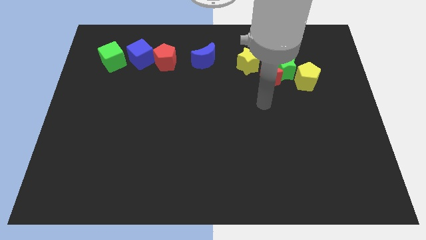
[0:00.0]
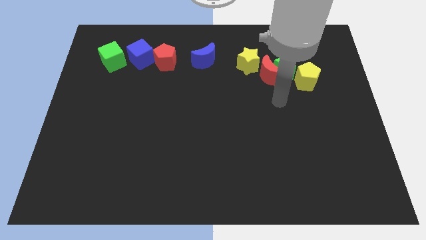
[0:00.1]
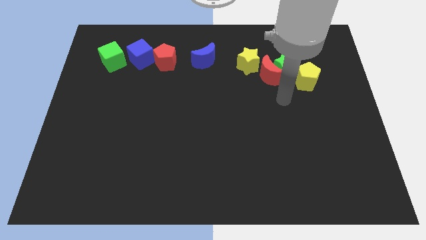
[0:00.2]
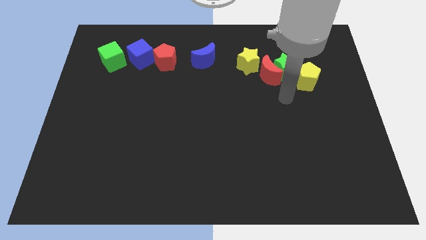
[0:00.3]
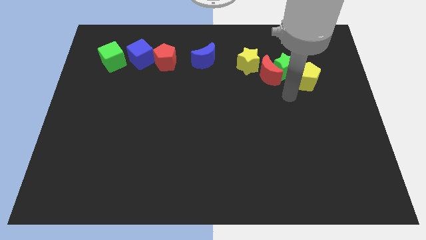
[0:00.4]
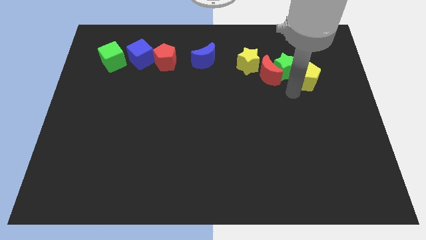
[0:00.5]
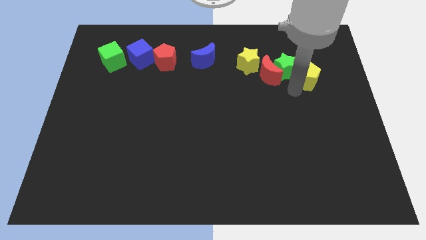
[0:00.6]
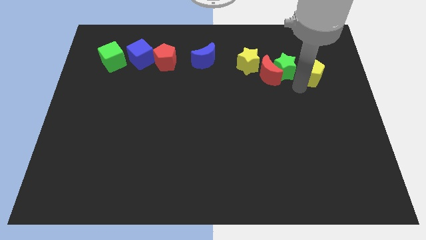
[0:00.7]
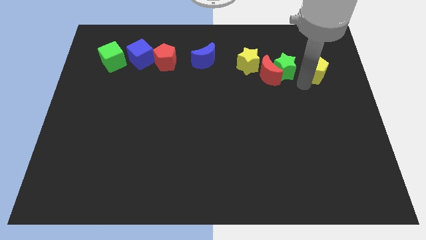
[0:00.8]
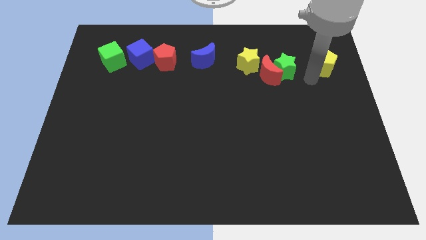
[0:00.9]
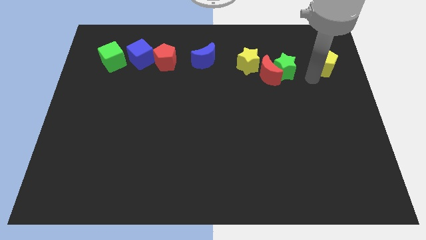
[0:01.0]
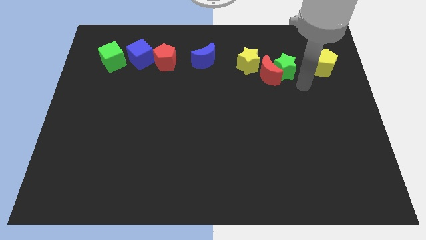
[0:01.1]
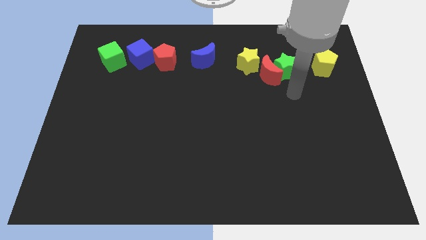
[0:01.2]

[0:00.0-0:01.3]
push the yellow pentagon to the top right side

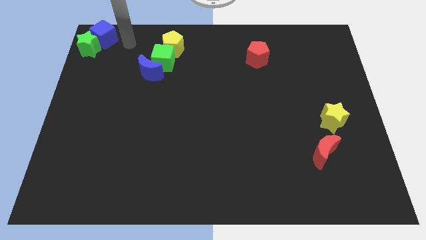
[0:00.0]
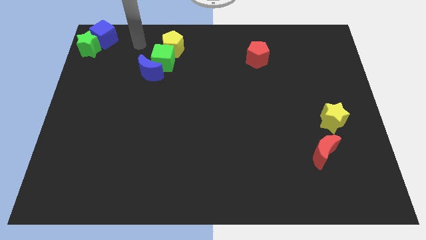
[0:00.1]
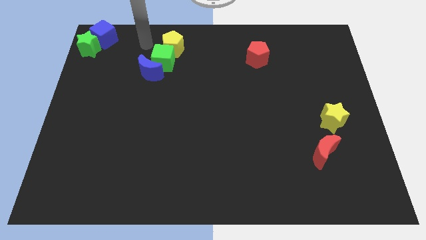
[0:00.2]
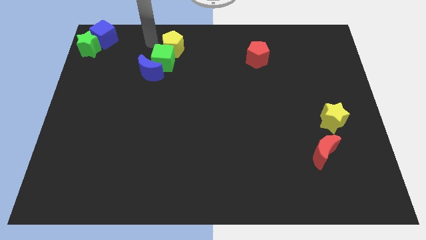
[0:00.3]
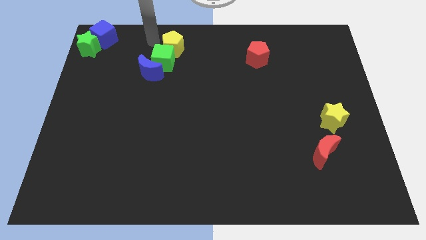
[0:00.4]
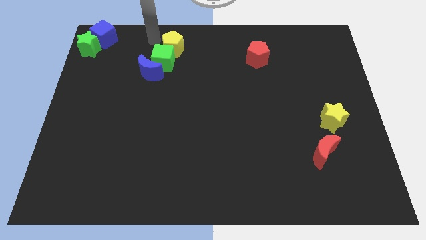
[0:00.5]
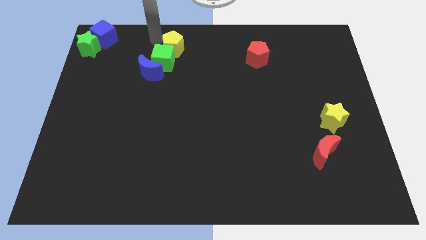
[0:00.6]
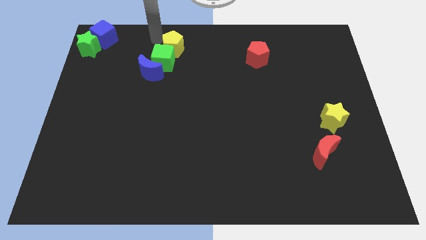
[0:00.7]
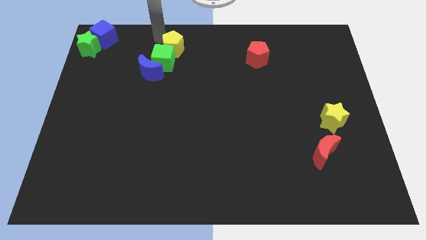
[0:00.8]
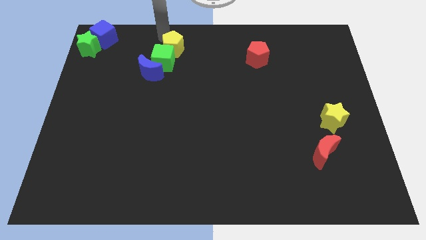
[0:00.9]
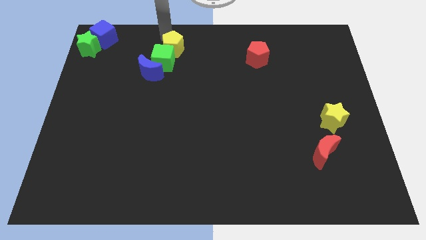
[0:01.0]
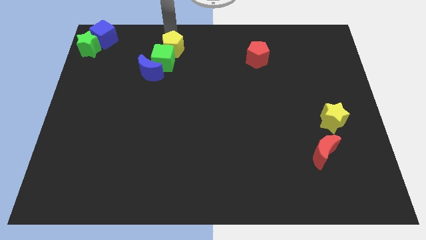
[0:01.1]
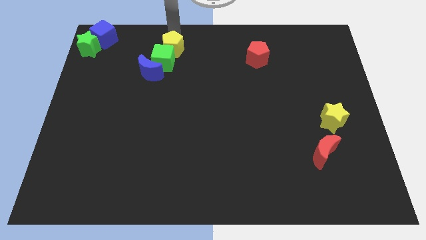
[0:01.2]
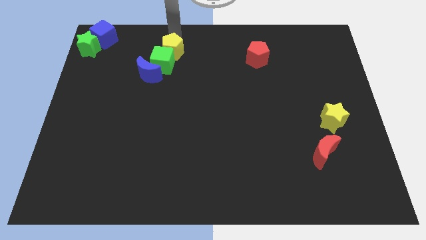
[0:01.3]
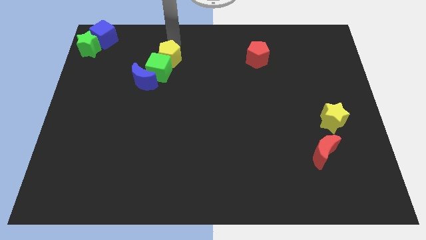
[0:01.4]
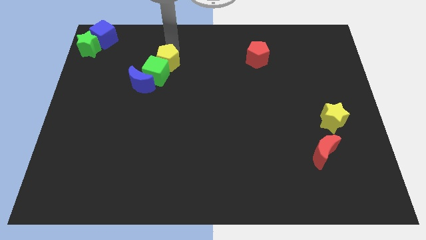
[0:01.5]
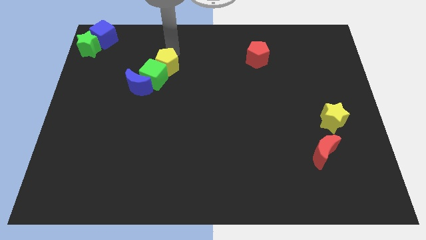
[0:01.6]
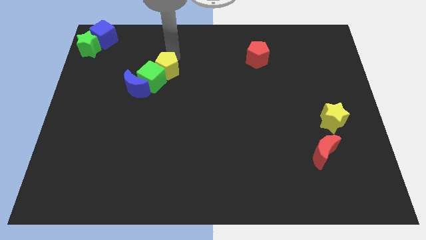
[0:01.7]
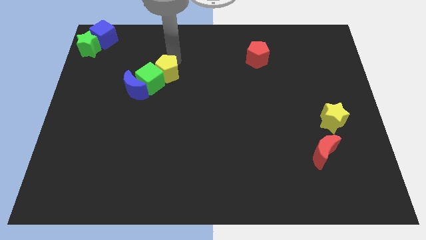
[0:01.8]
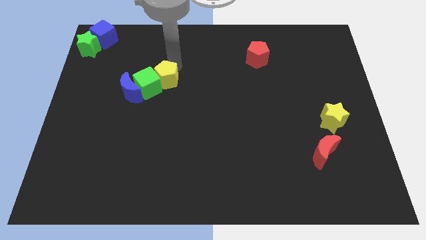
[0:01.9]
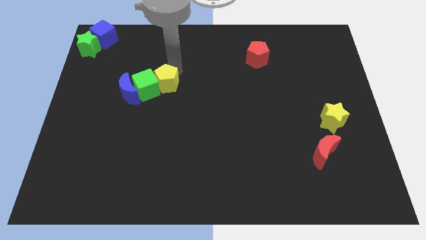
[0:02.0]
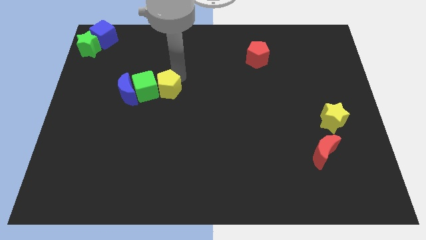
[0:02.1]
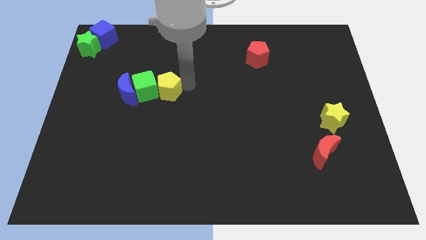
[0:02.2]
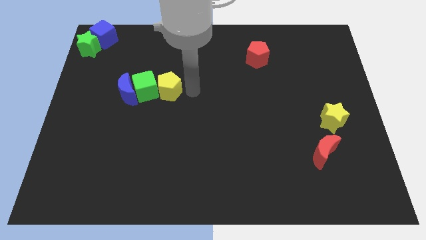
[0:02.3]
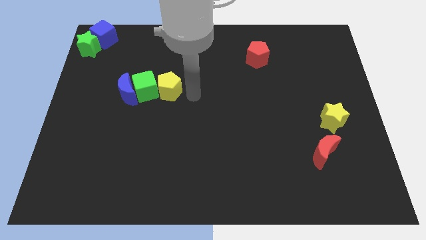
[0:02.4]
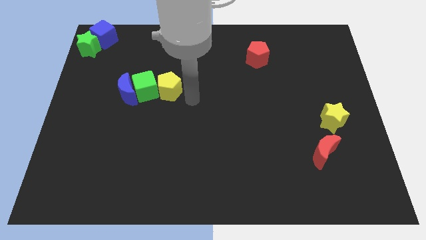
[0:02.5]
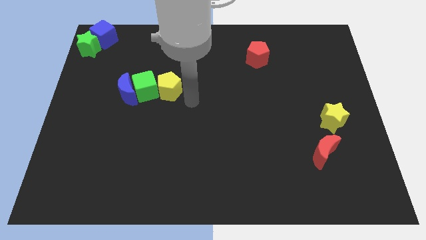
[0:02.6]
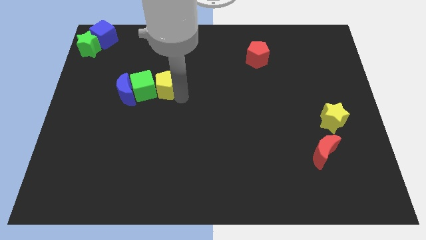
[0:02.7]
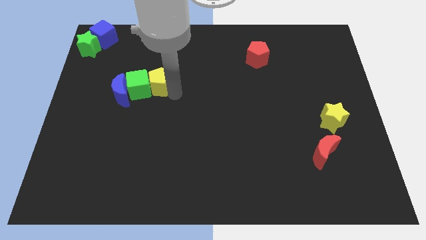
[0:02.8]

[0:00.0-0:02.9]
move the yellow pentagon green cube and blue moon slightly towards the bottom

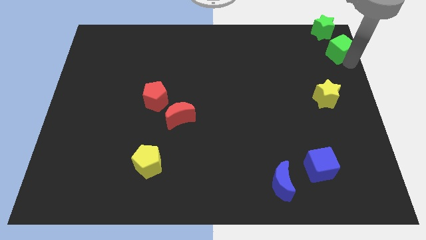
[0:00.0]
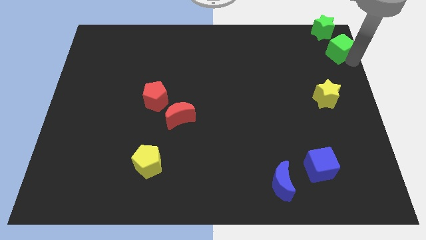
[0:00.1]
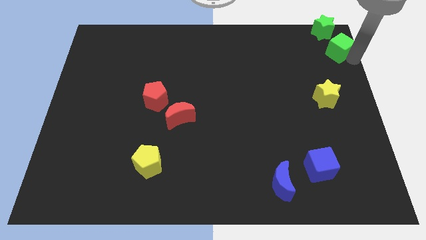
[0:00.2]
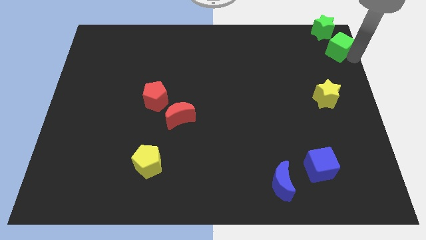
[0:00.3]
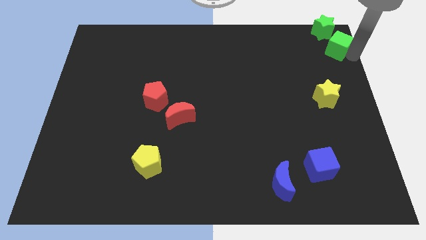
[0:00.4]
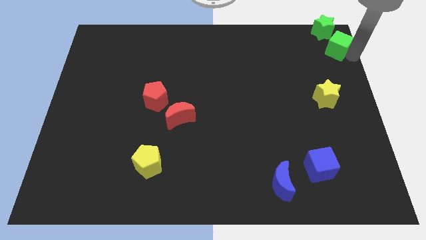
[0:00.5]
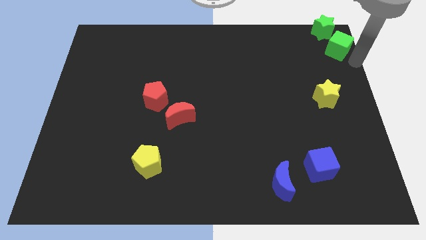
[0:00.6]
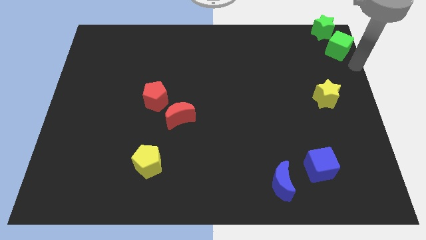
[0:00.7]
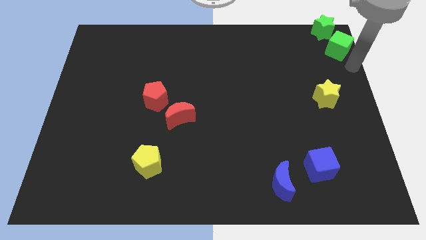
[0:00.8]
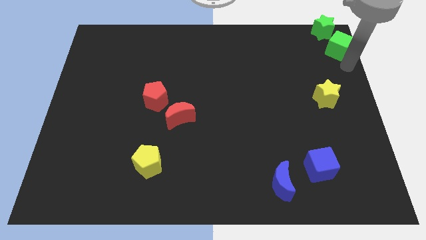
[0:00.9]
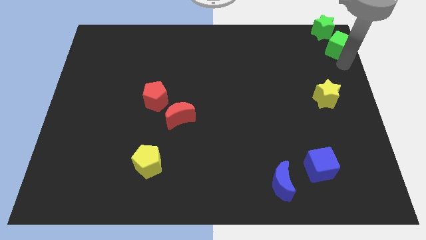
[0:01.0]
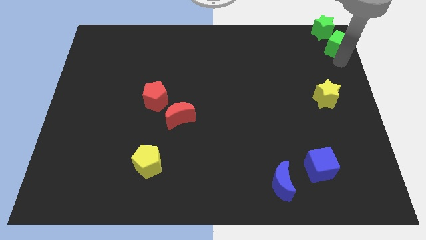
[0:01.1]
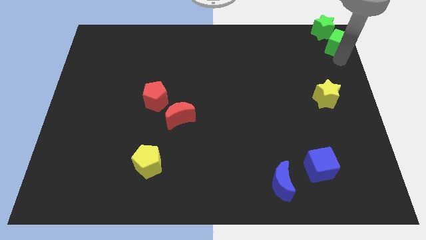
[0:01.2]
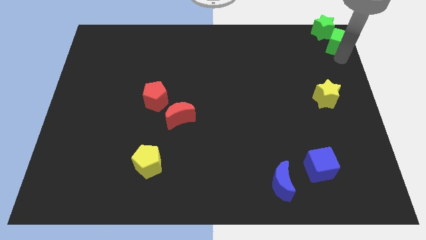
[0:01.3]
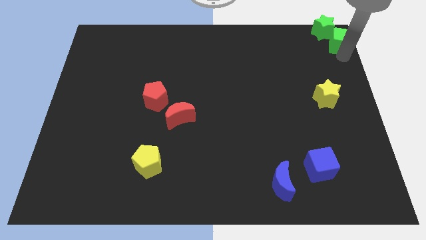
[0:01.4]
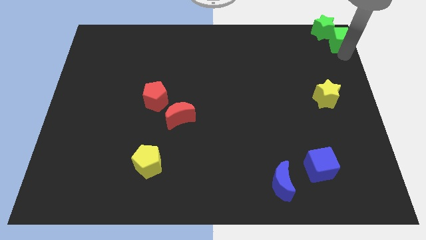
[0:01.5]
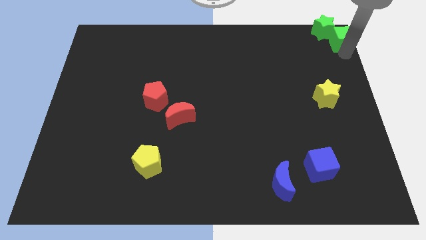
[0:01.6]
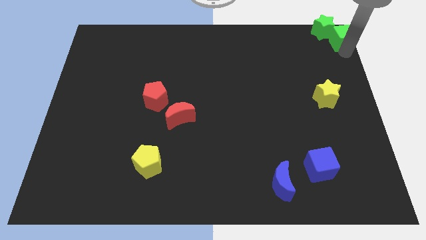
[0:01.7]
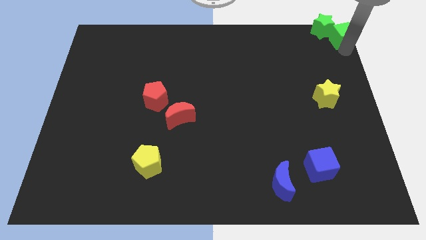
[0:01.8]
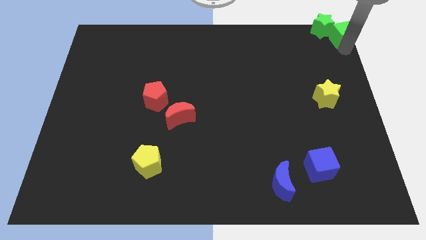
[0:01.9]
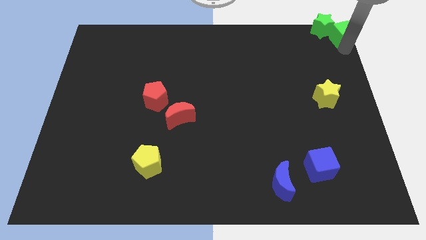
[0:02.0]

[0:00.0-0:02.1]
push the green cube to the right of the green star

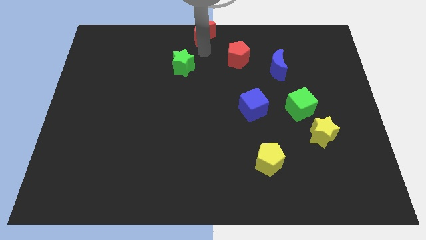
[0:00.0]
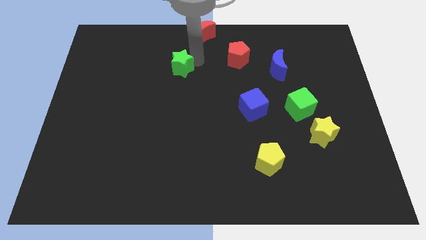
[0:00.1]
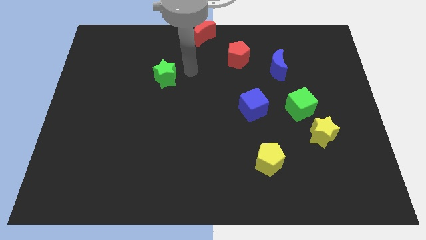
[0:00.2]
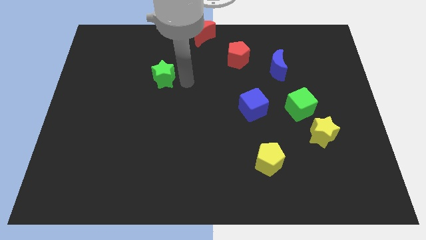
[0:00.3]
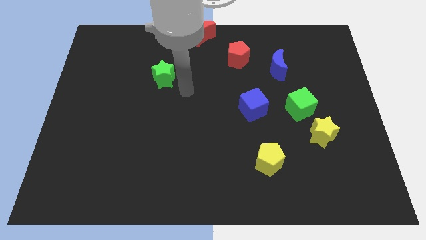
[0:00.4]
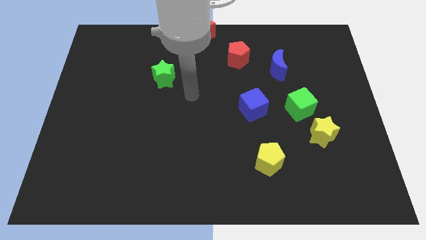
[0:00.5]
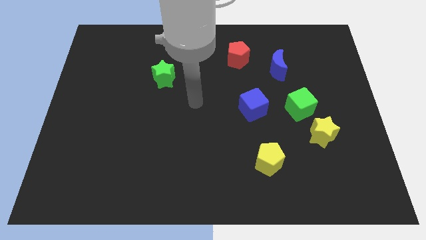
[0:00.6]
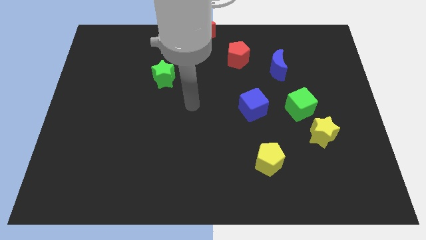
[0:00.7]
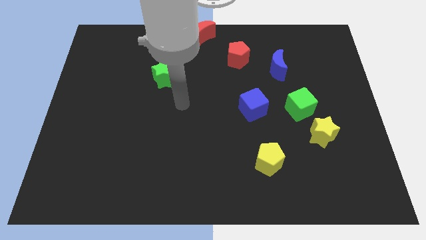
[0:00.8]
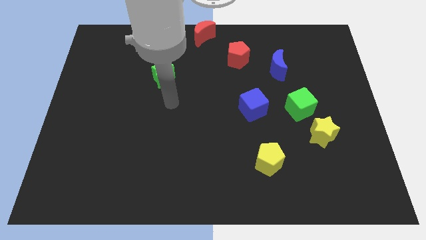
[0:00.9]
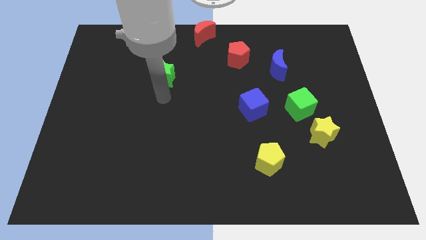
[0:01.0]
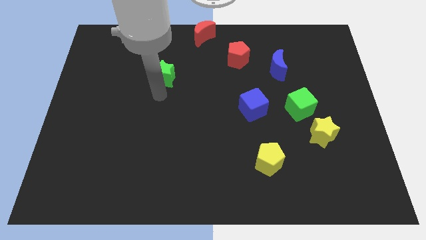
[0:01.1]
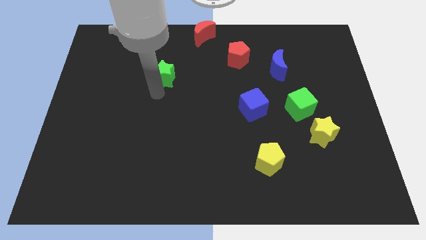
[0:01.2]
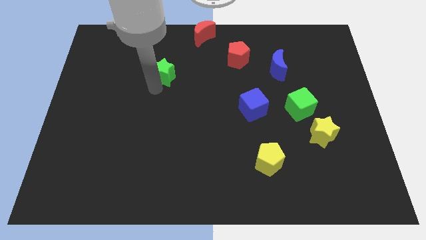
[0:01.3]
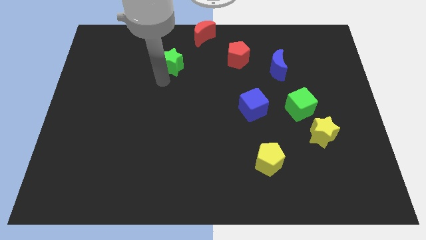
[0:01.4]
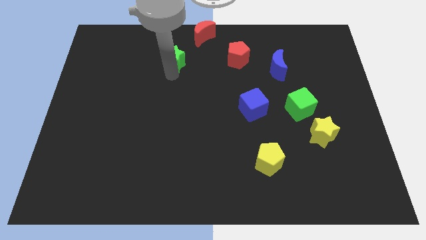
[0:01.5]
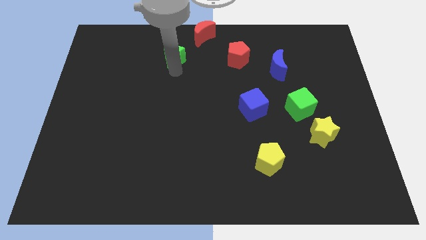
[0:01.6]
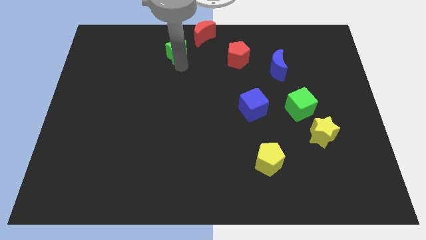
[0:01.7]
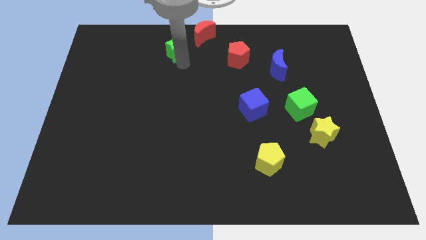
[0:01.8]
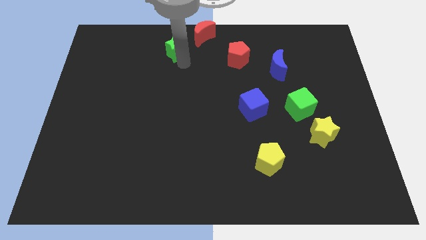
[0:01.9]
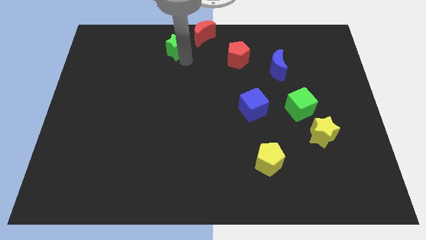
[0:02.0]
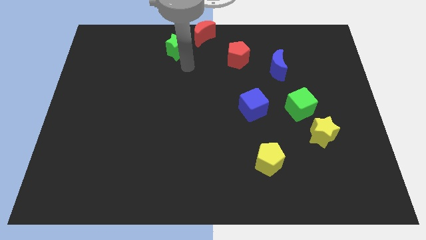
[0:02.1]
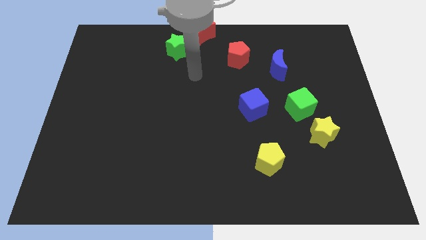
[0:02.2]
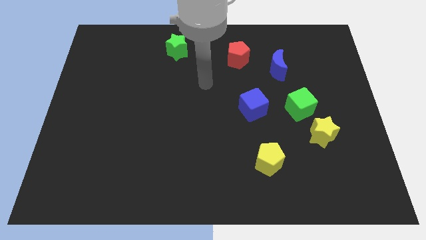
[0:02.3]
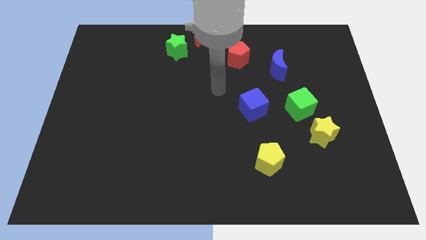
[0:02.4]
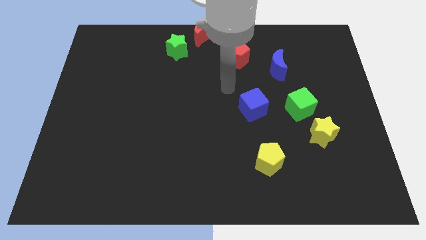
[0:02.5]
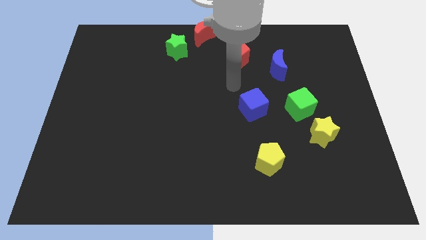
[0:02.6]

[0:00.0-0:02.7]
place the green star to the left of the red pentagon
